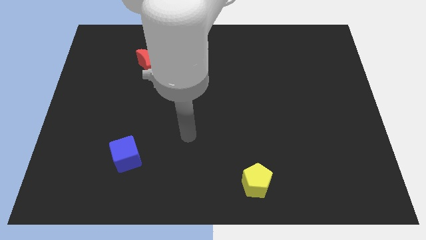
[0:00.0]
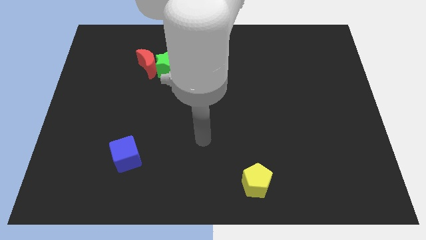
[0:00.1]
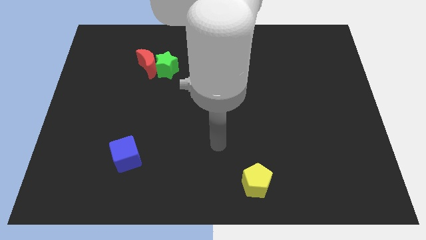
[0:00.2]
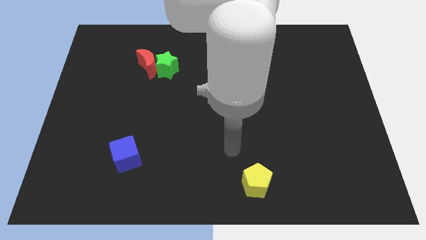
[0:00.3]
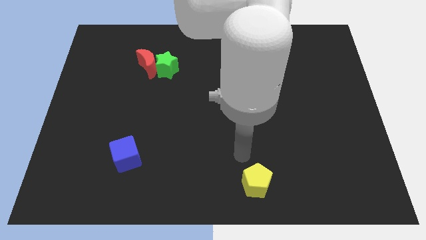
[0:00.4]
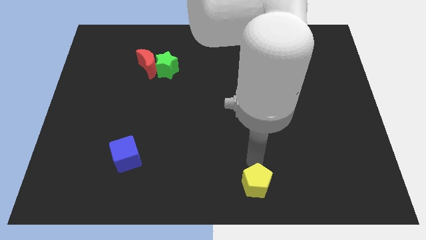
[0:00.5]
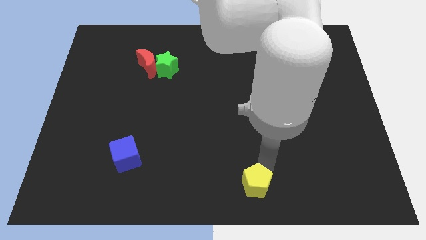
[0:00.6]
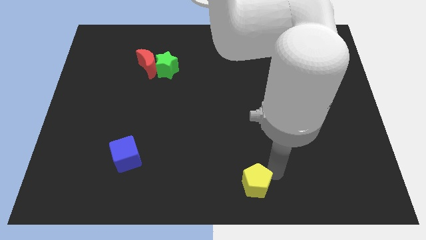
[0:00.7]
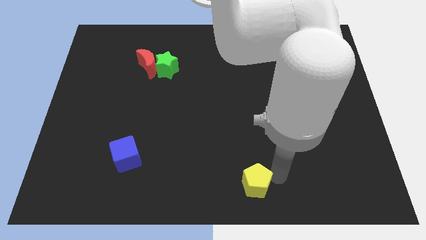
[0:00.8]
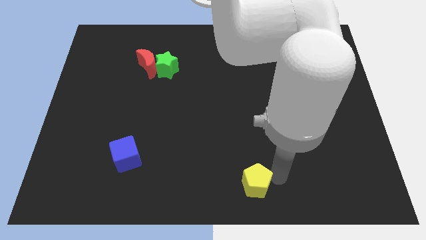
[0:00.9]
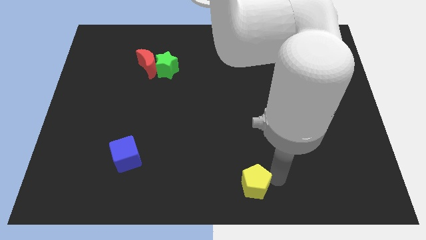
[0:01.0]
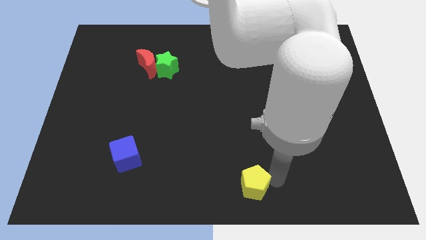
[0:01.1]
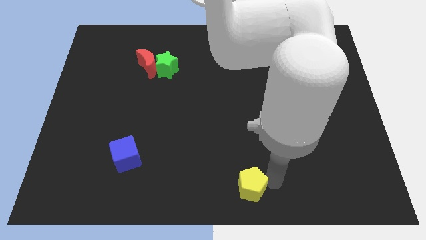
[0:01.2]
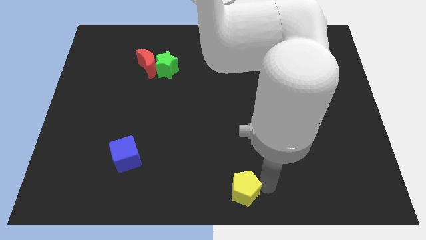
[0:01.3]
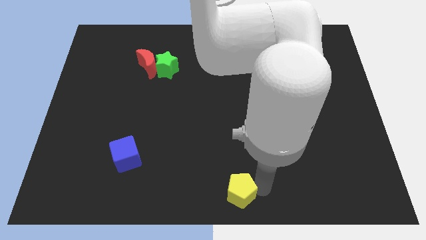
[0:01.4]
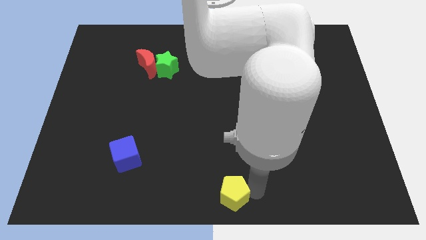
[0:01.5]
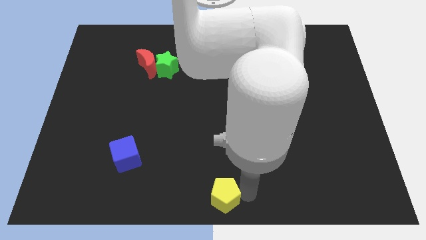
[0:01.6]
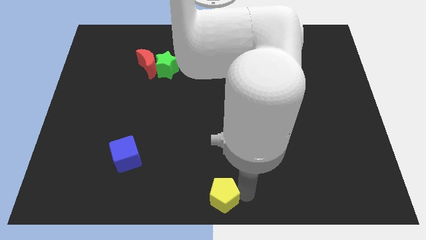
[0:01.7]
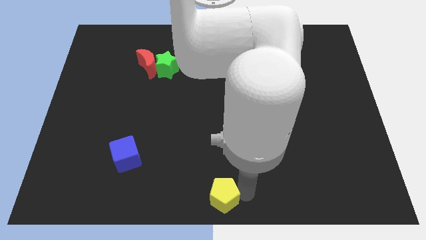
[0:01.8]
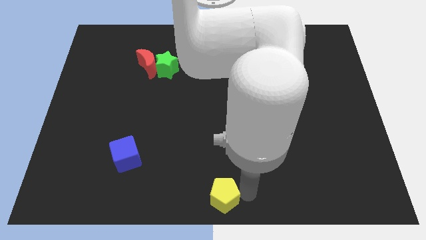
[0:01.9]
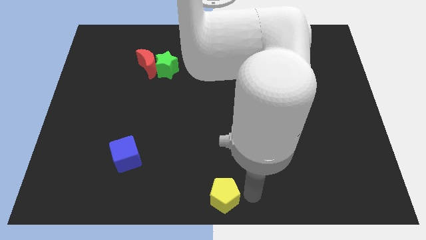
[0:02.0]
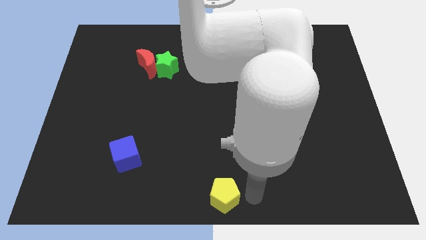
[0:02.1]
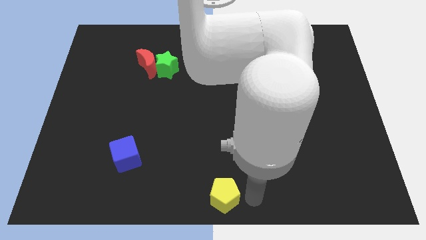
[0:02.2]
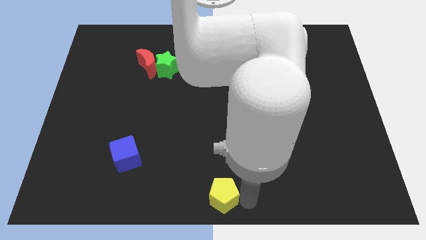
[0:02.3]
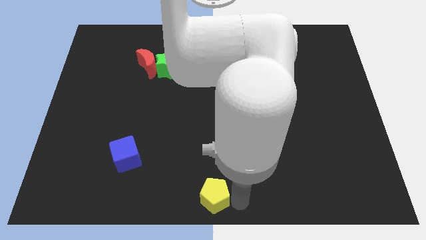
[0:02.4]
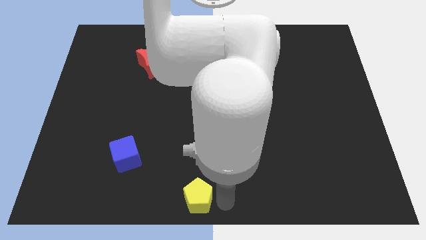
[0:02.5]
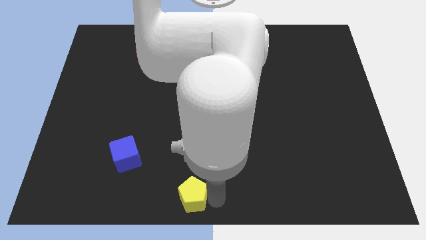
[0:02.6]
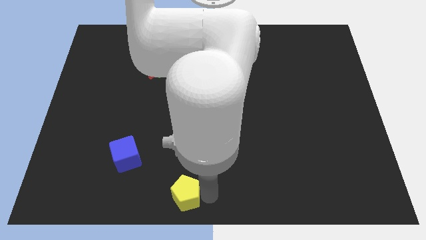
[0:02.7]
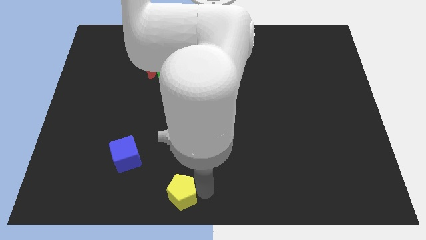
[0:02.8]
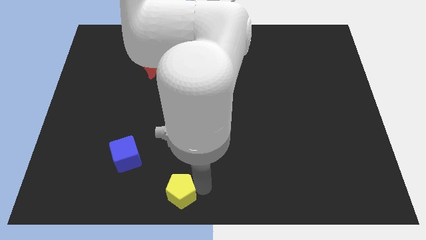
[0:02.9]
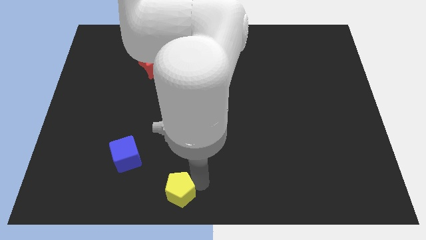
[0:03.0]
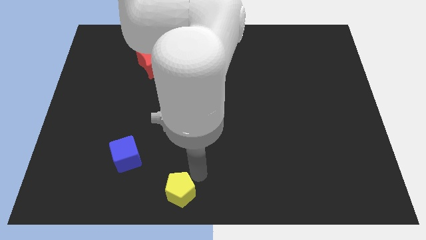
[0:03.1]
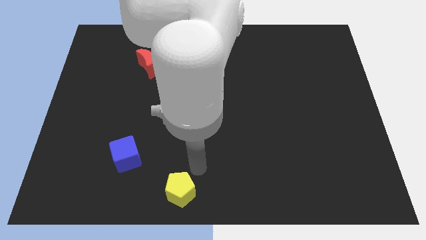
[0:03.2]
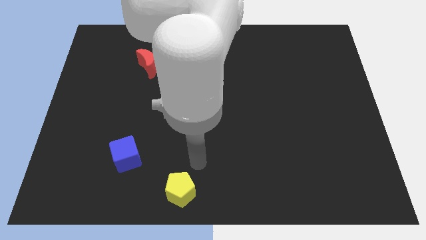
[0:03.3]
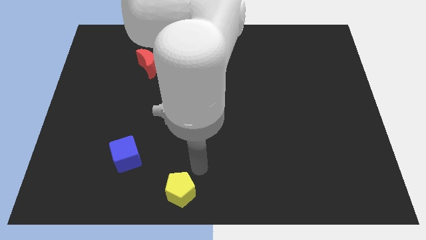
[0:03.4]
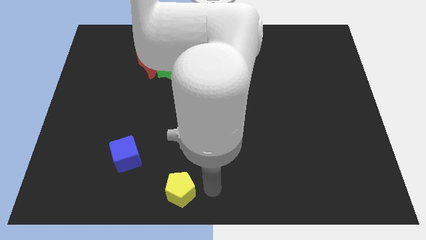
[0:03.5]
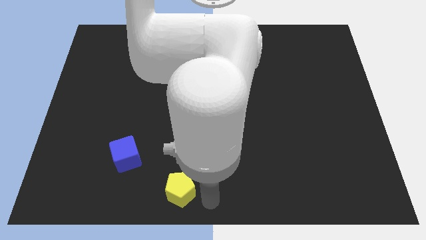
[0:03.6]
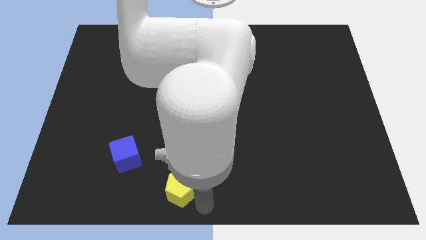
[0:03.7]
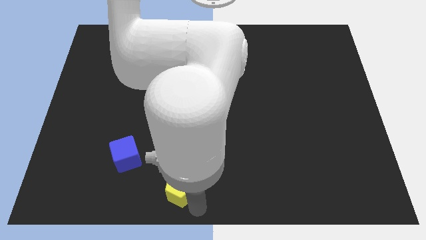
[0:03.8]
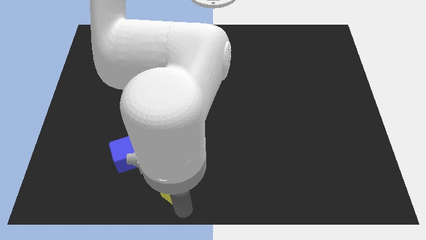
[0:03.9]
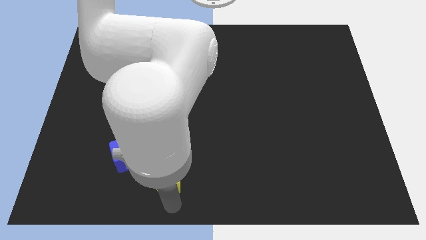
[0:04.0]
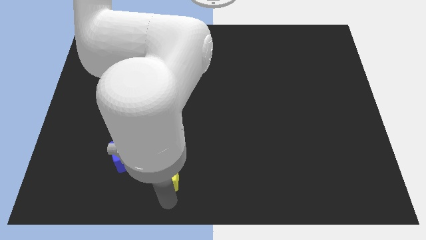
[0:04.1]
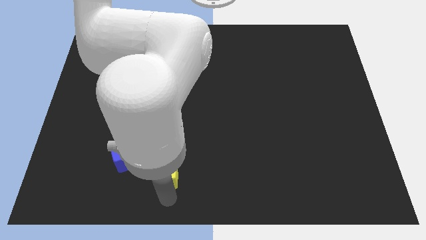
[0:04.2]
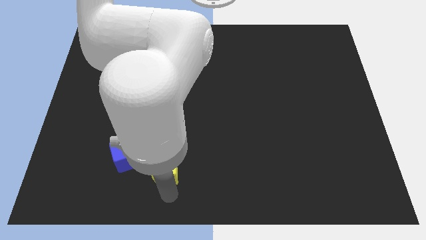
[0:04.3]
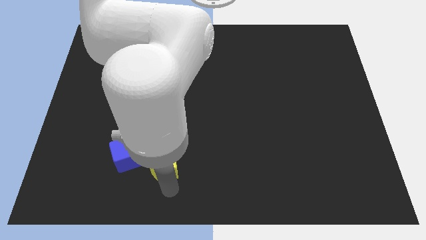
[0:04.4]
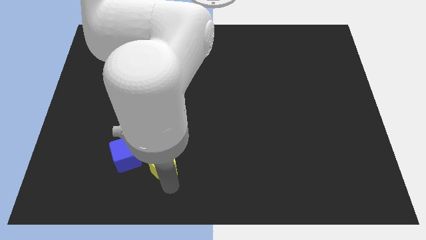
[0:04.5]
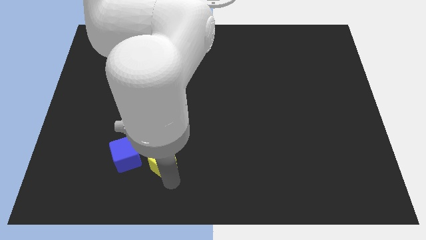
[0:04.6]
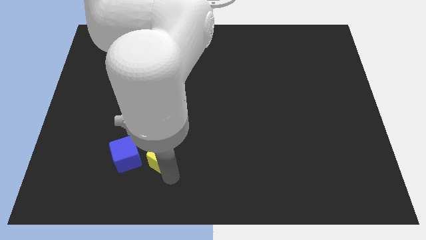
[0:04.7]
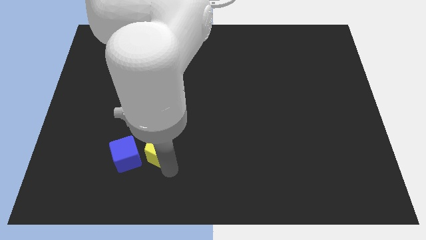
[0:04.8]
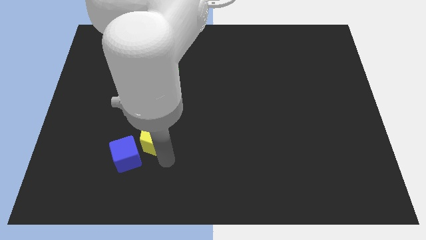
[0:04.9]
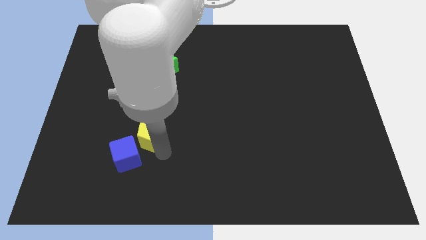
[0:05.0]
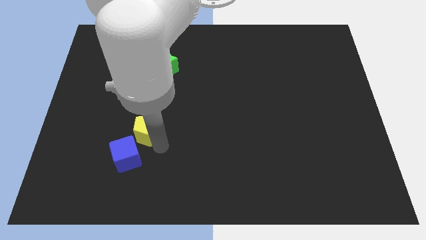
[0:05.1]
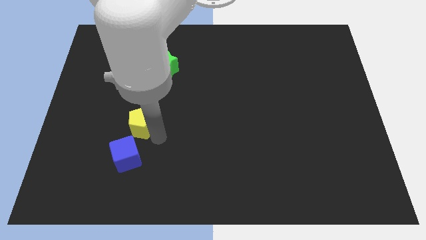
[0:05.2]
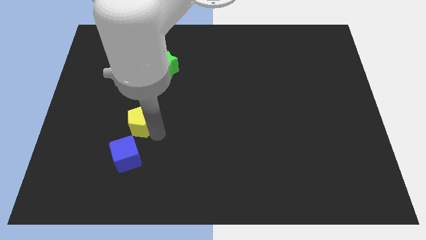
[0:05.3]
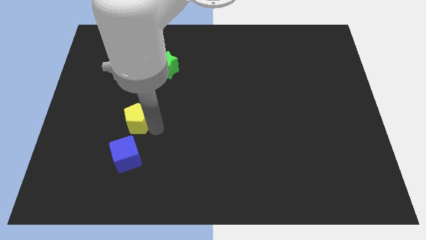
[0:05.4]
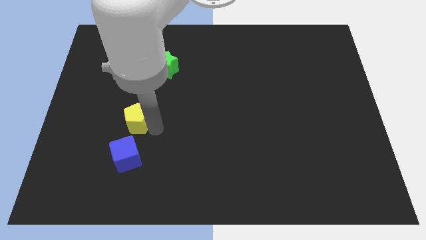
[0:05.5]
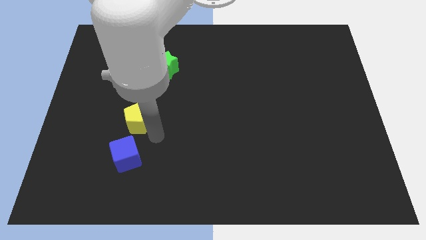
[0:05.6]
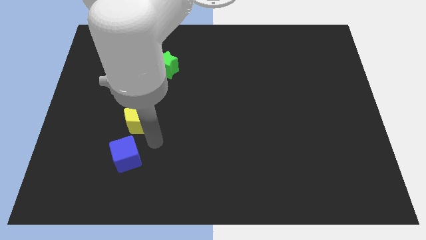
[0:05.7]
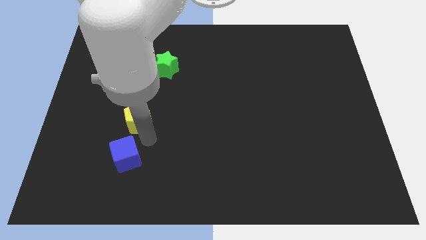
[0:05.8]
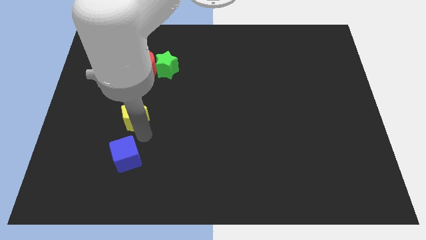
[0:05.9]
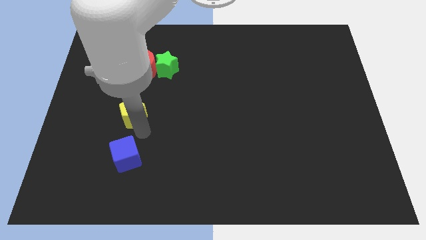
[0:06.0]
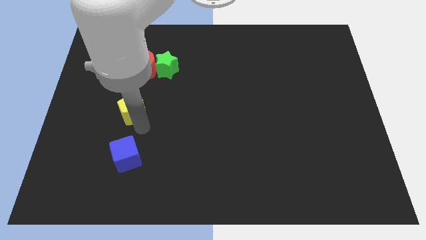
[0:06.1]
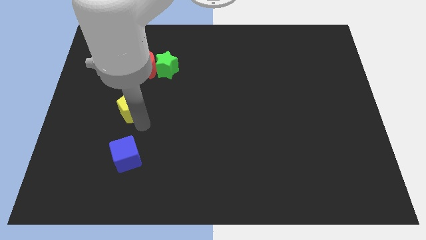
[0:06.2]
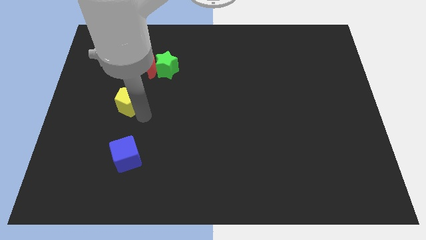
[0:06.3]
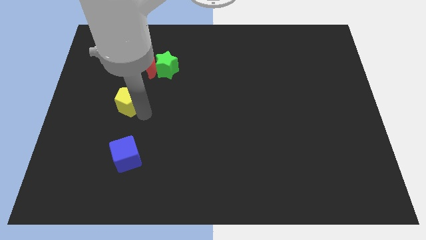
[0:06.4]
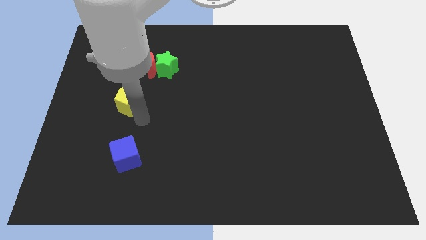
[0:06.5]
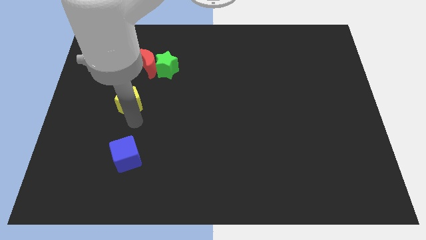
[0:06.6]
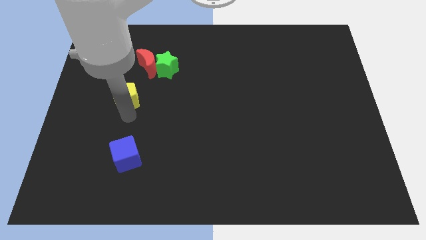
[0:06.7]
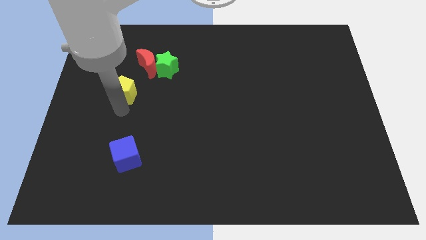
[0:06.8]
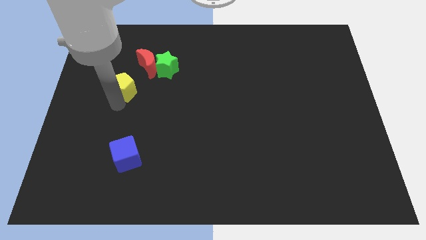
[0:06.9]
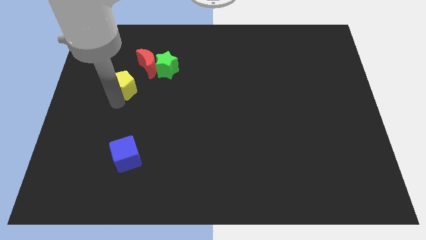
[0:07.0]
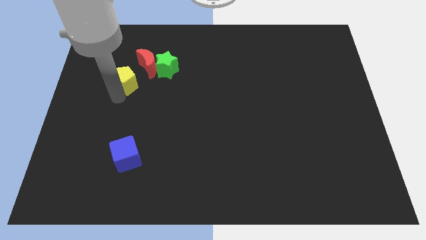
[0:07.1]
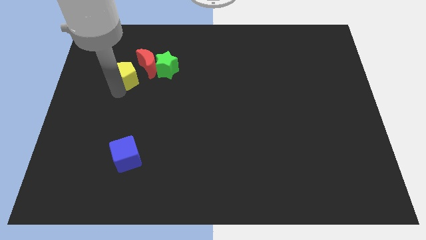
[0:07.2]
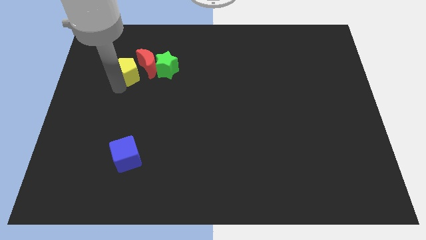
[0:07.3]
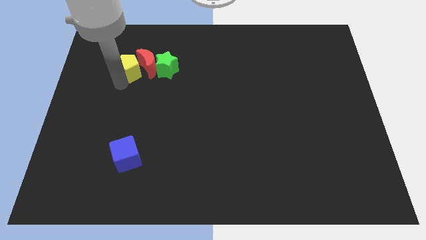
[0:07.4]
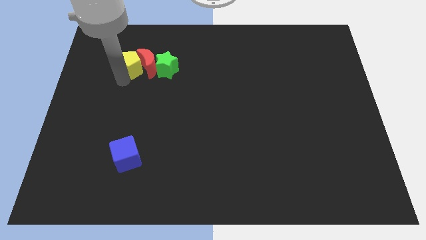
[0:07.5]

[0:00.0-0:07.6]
slide the yellow pentagon to the moon

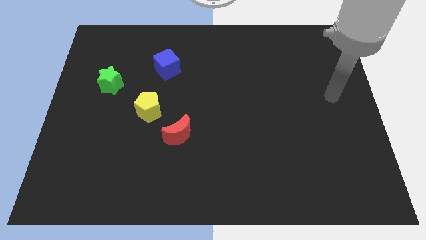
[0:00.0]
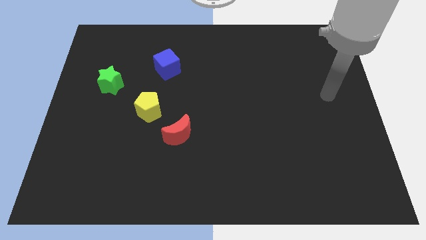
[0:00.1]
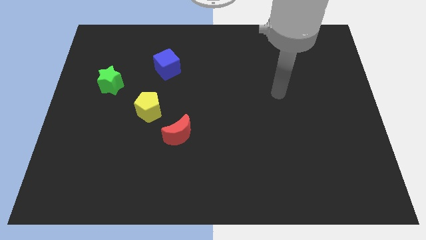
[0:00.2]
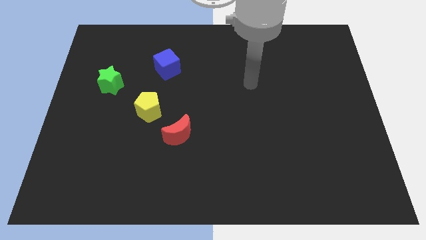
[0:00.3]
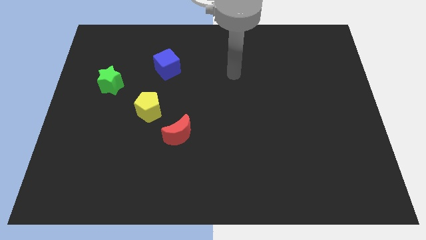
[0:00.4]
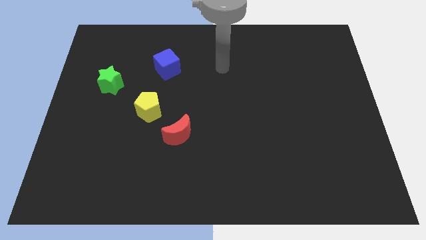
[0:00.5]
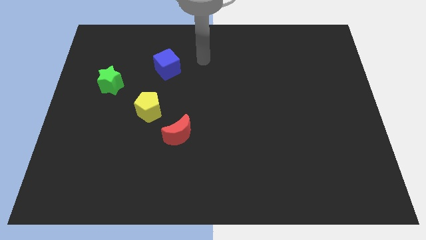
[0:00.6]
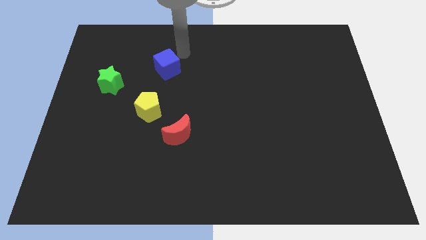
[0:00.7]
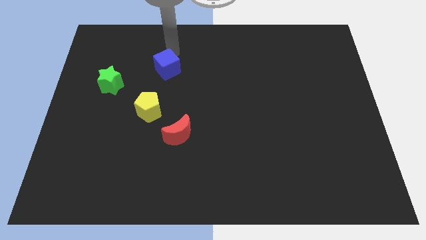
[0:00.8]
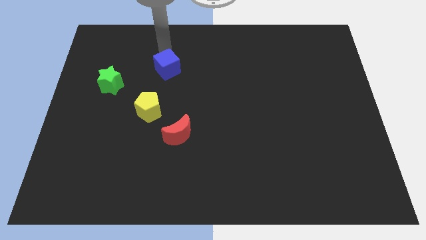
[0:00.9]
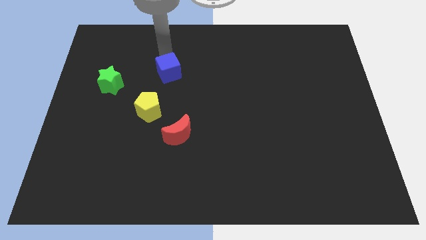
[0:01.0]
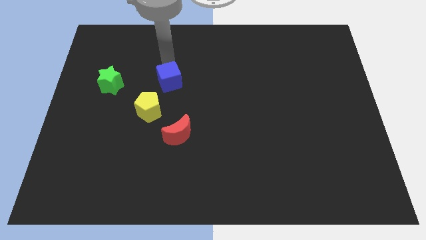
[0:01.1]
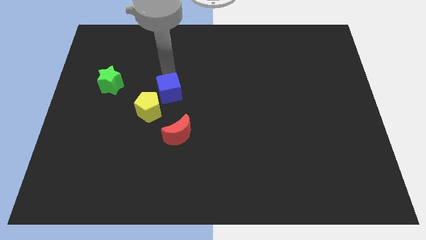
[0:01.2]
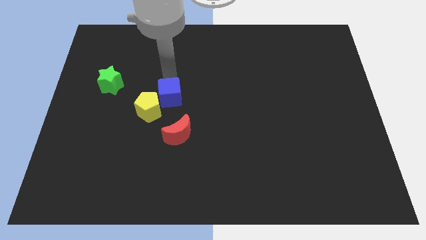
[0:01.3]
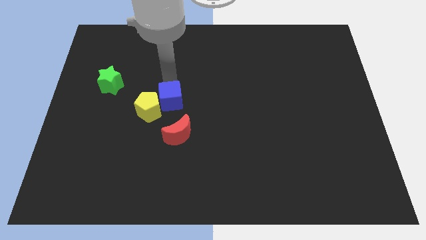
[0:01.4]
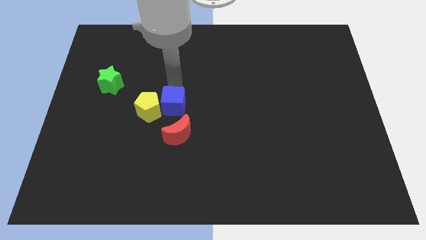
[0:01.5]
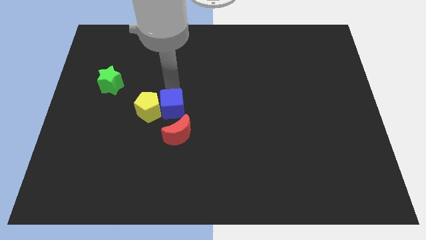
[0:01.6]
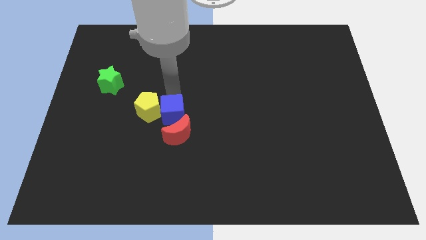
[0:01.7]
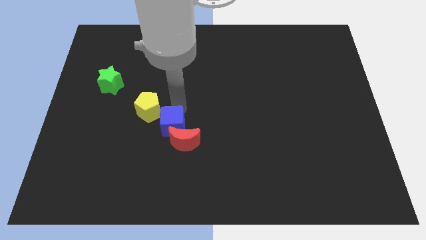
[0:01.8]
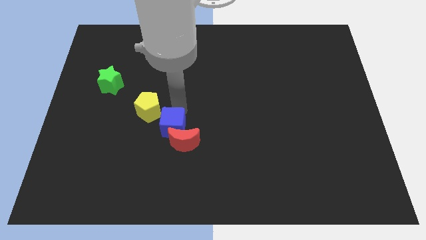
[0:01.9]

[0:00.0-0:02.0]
slide the blue block to the red block
